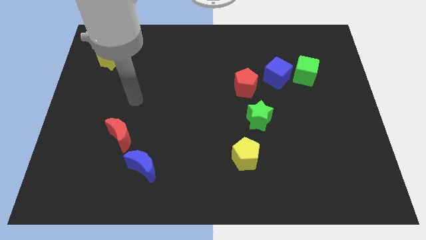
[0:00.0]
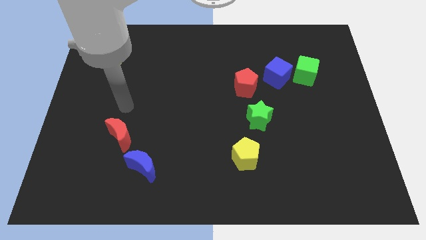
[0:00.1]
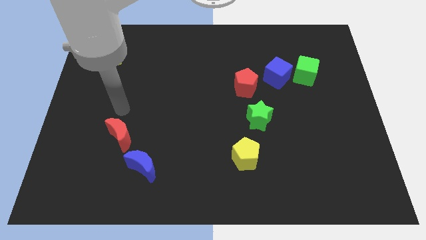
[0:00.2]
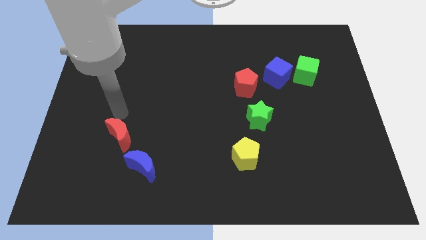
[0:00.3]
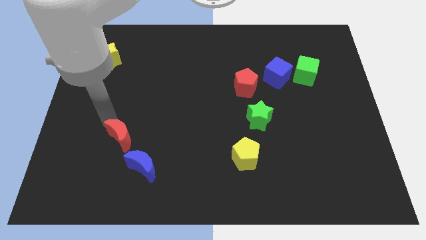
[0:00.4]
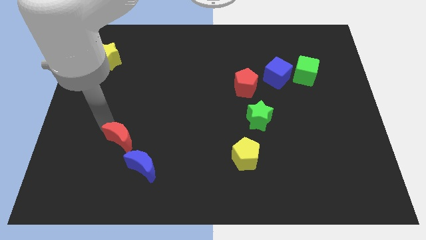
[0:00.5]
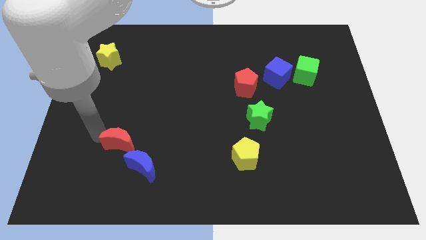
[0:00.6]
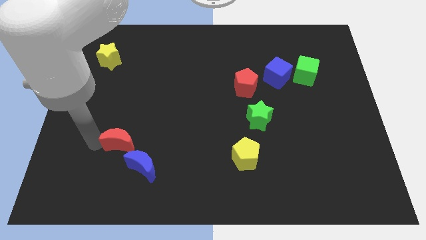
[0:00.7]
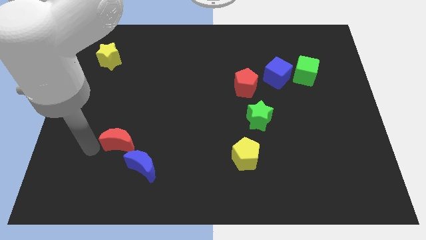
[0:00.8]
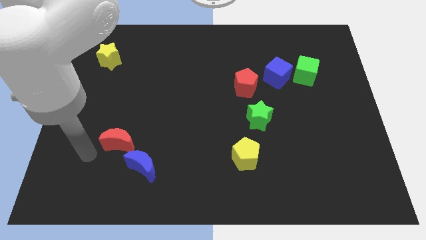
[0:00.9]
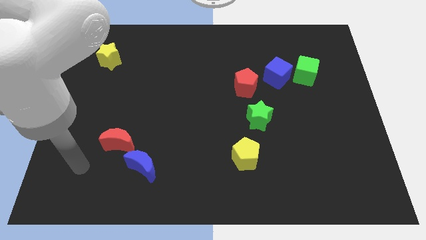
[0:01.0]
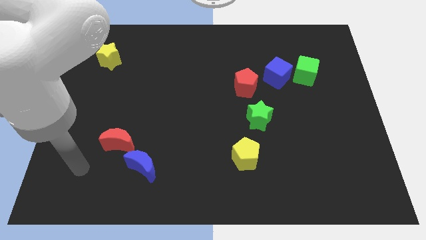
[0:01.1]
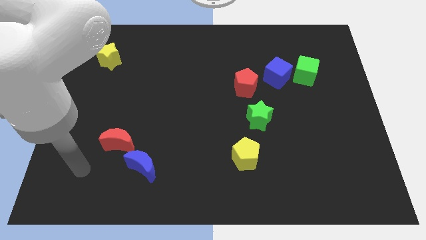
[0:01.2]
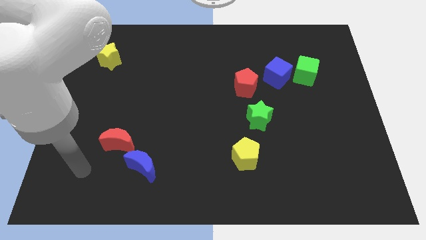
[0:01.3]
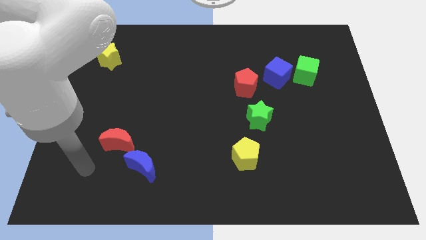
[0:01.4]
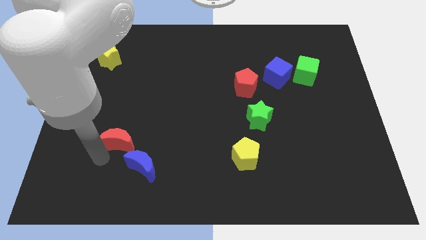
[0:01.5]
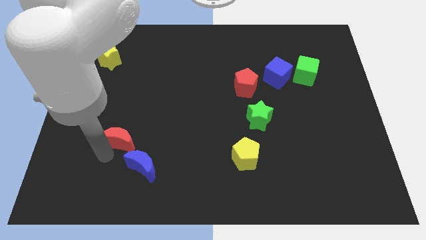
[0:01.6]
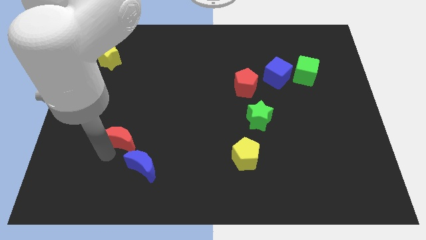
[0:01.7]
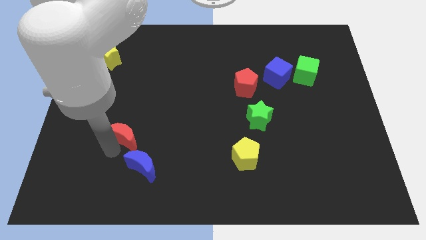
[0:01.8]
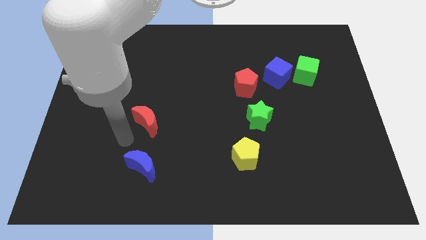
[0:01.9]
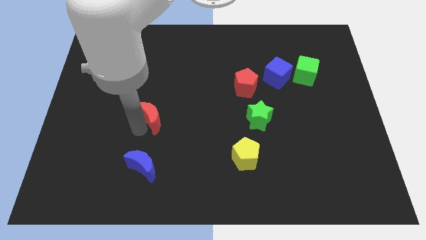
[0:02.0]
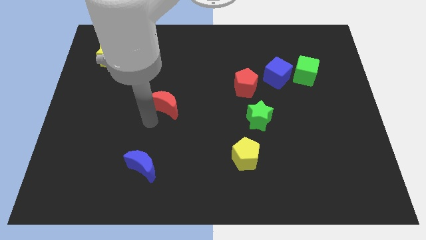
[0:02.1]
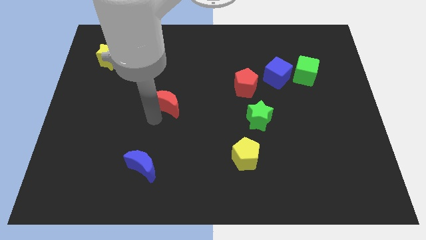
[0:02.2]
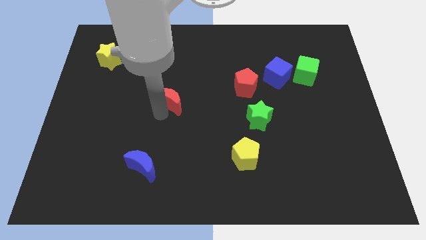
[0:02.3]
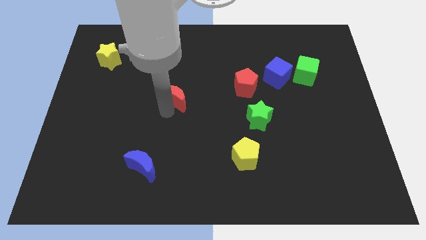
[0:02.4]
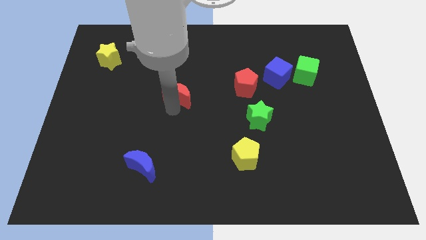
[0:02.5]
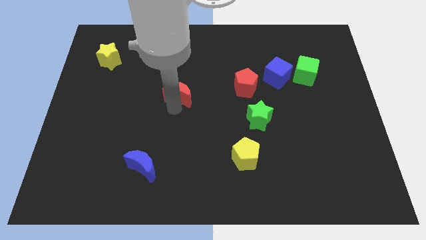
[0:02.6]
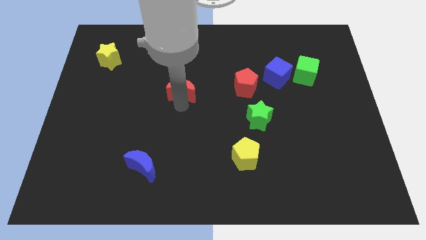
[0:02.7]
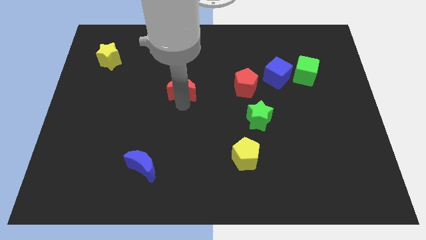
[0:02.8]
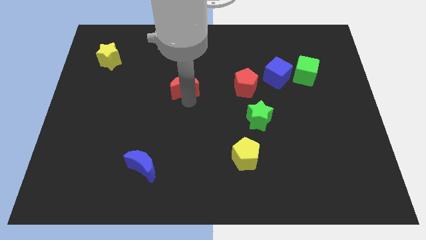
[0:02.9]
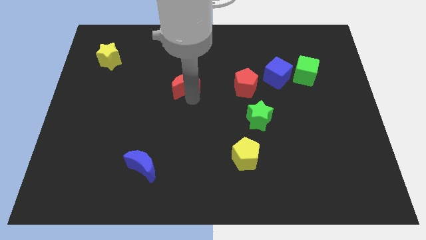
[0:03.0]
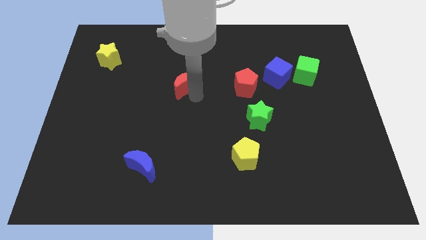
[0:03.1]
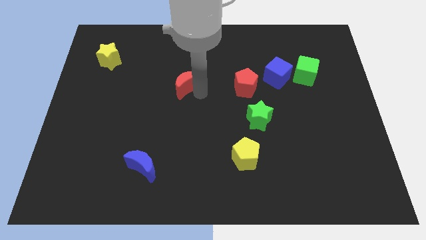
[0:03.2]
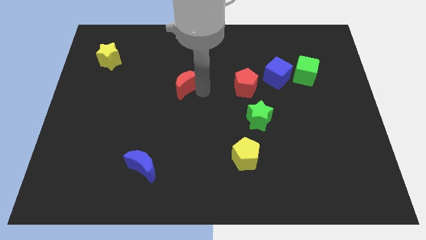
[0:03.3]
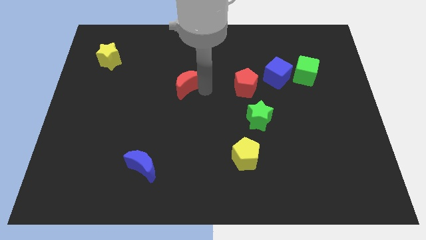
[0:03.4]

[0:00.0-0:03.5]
place the red crescent left to the red pentagon

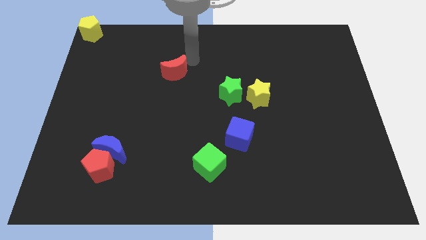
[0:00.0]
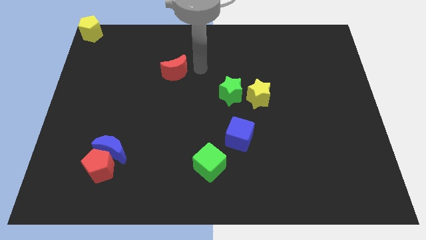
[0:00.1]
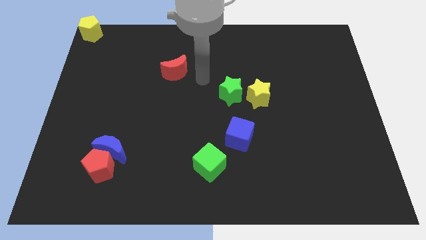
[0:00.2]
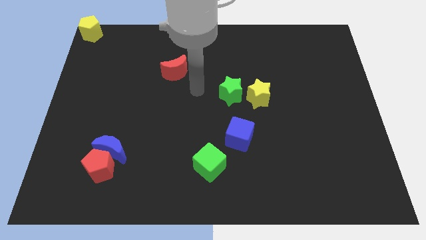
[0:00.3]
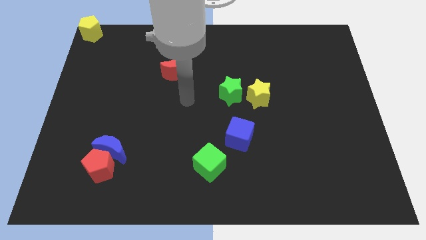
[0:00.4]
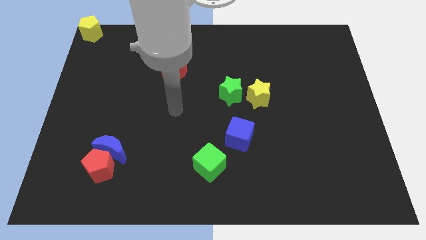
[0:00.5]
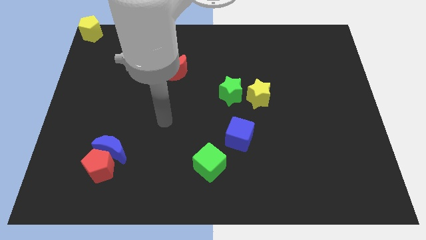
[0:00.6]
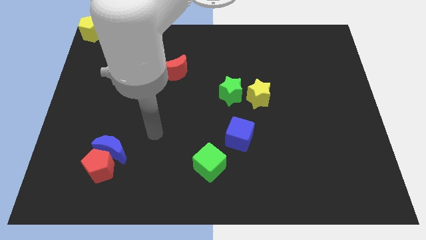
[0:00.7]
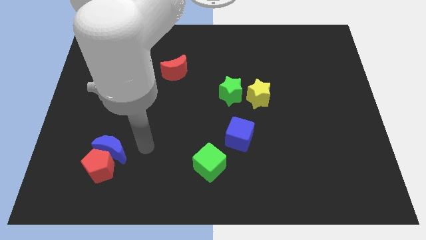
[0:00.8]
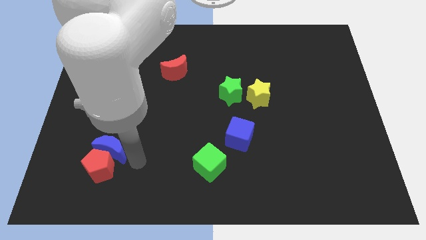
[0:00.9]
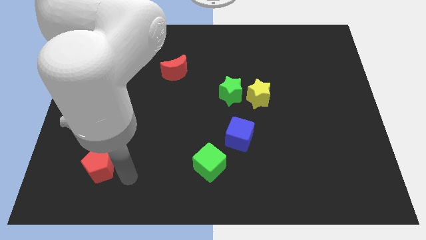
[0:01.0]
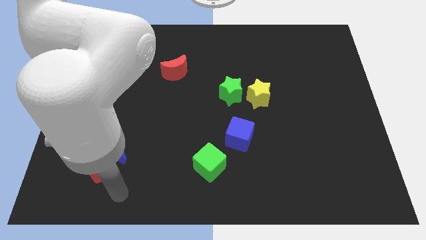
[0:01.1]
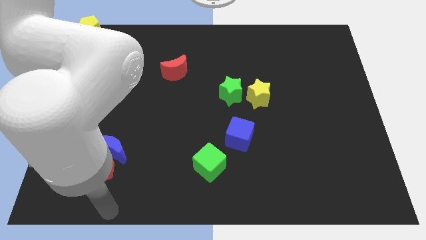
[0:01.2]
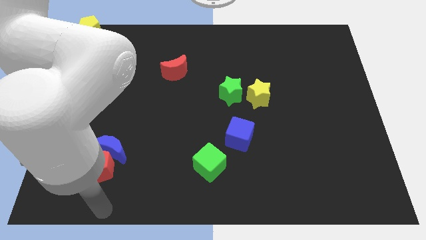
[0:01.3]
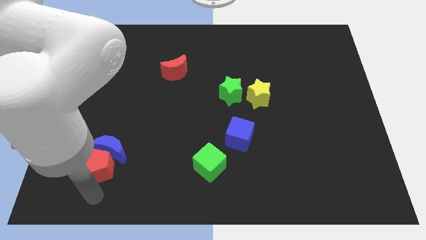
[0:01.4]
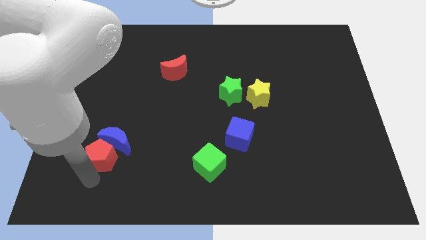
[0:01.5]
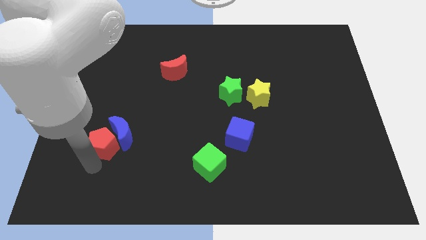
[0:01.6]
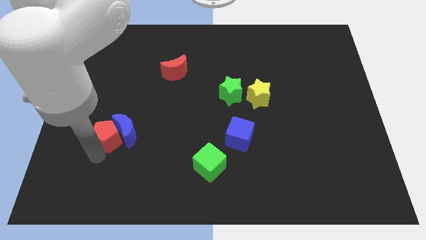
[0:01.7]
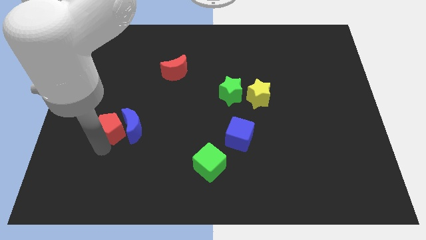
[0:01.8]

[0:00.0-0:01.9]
drag the red pentagon parallel left to the blue moon

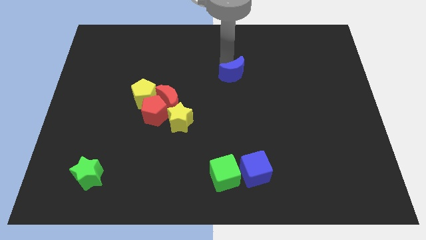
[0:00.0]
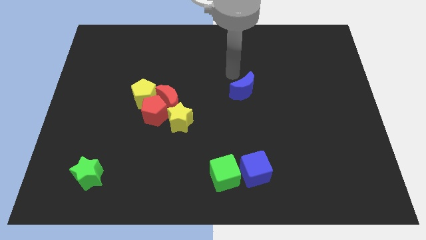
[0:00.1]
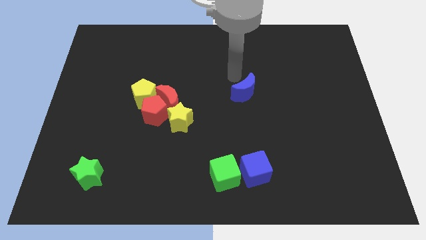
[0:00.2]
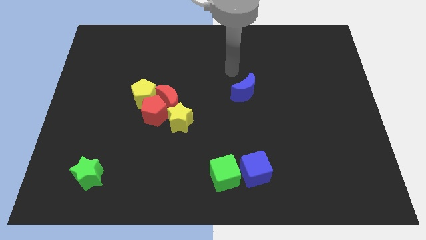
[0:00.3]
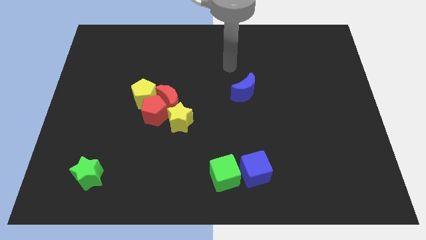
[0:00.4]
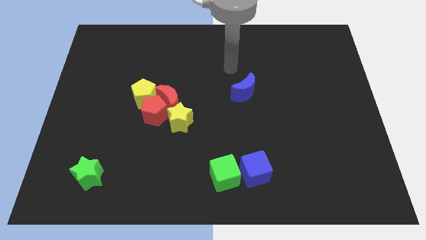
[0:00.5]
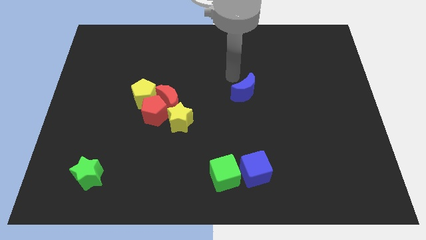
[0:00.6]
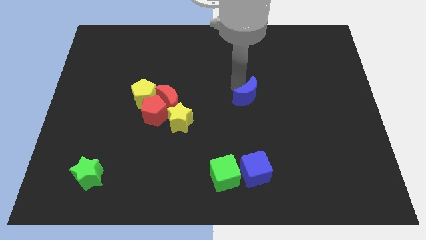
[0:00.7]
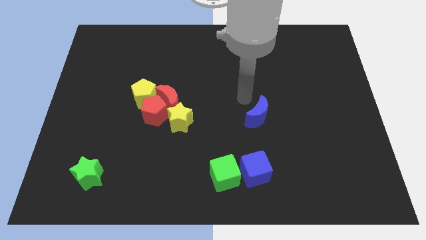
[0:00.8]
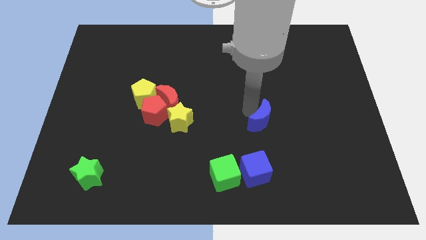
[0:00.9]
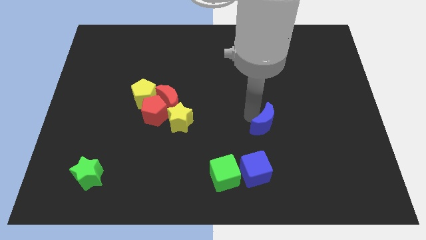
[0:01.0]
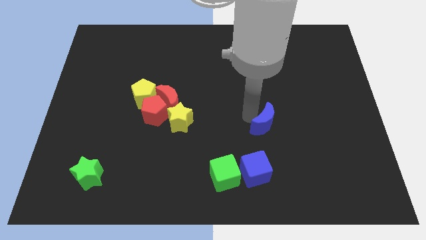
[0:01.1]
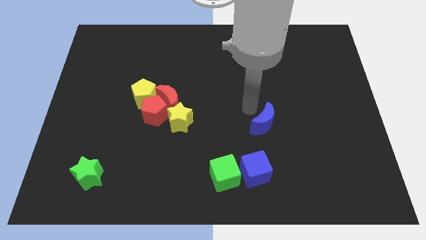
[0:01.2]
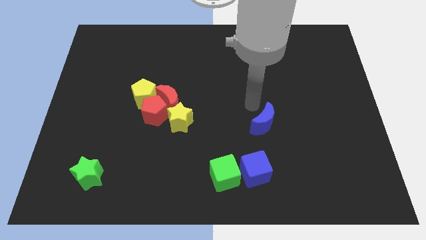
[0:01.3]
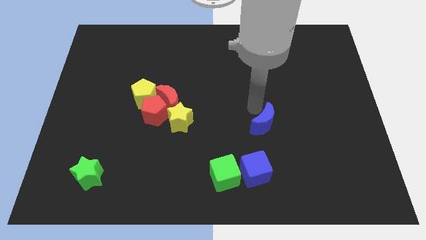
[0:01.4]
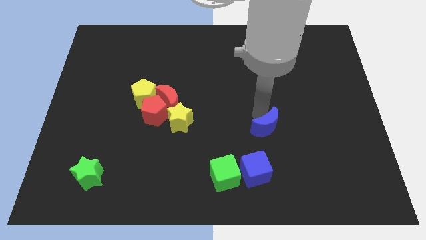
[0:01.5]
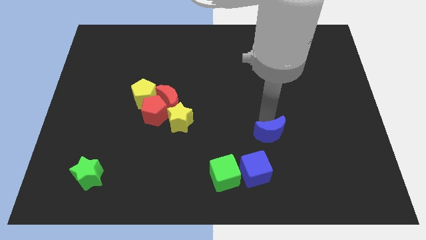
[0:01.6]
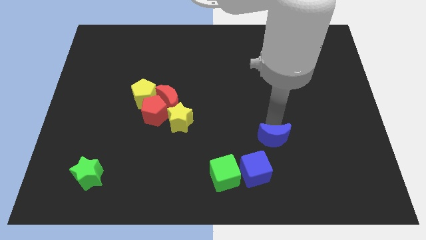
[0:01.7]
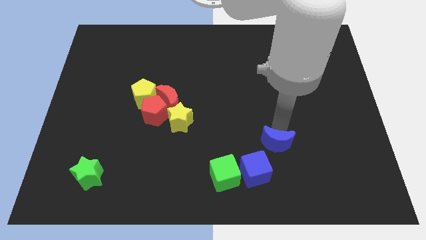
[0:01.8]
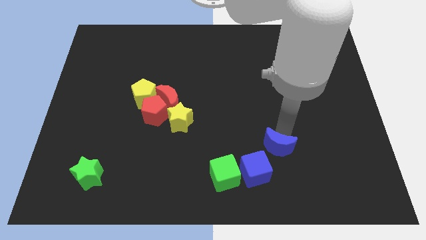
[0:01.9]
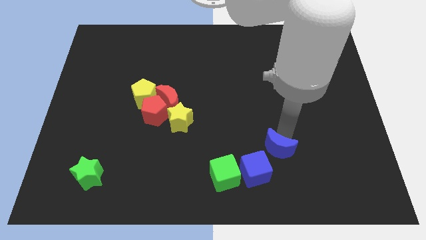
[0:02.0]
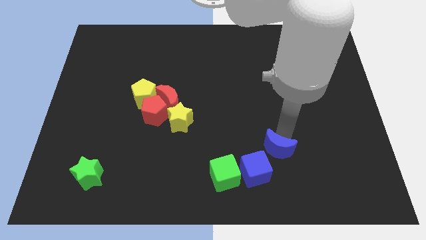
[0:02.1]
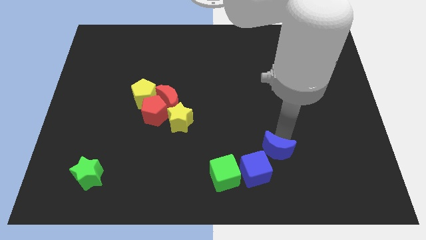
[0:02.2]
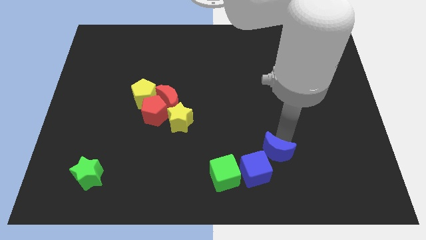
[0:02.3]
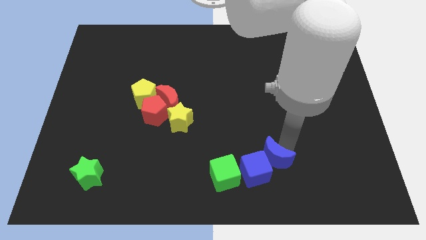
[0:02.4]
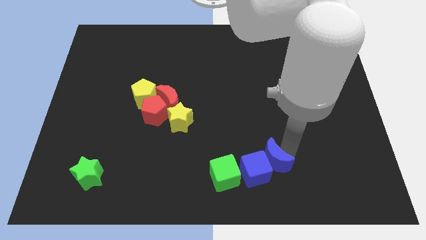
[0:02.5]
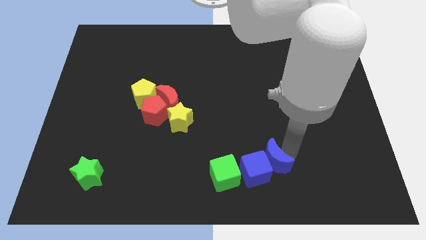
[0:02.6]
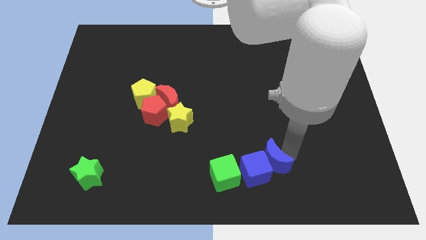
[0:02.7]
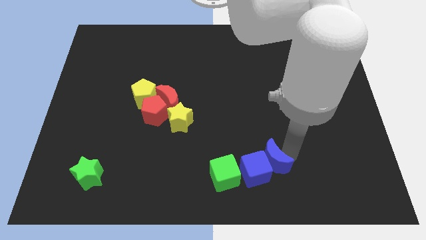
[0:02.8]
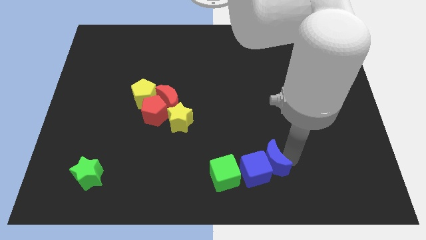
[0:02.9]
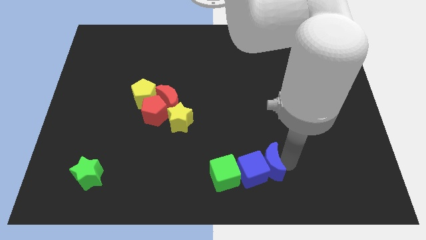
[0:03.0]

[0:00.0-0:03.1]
push blue crescent beside blue cube

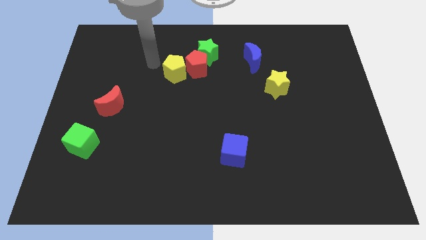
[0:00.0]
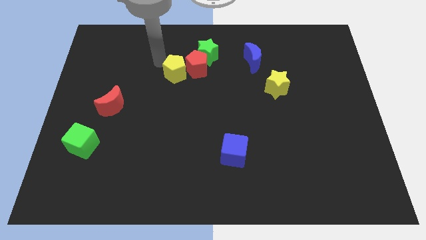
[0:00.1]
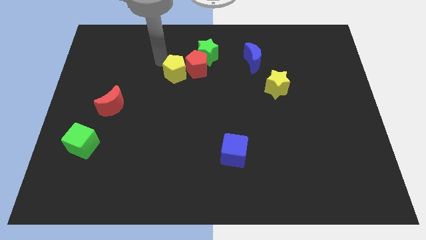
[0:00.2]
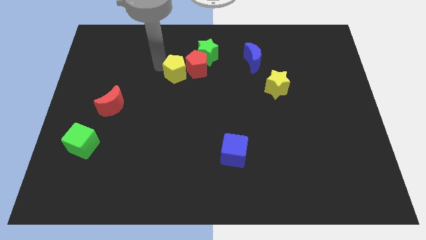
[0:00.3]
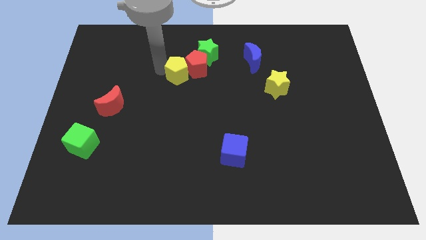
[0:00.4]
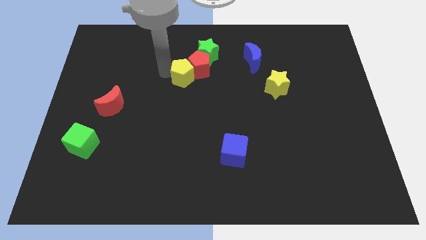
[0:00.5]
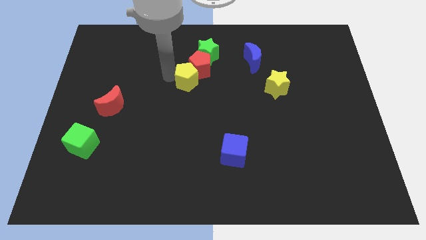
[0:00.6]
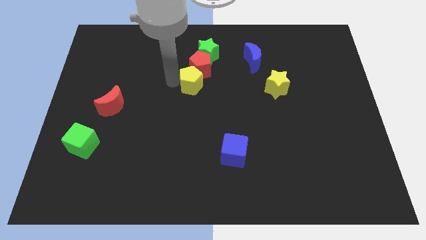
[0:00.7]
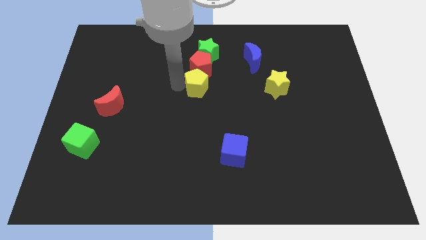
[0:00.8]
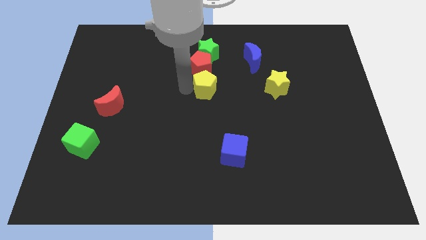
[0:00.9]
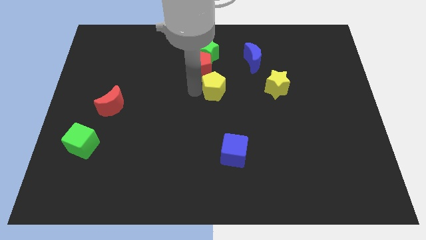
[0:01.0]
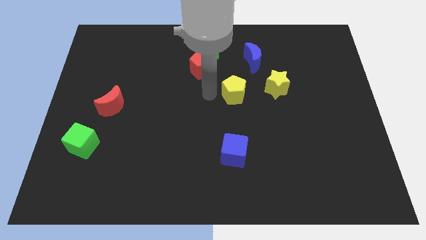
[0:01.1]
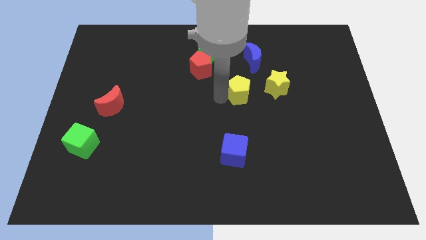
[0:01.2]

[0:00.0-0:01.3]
push yellow pentagon towards the top side of the blue cube
